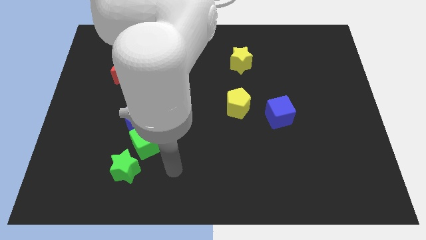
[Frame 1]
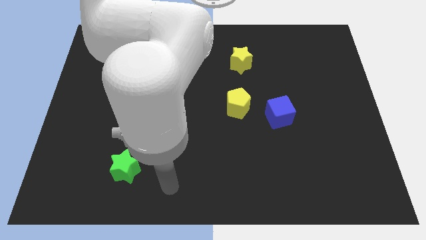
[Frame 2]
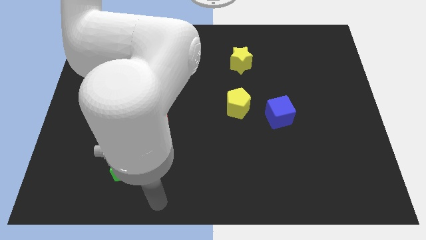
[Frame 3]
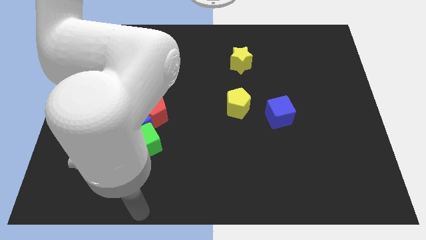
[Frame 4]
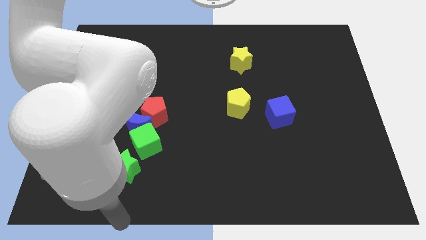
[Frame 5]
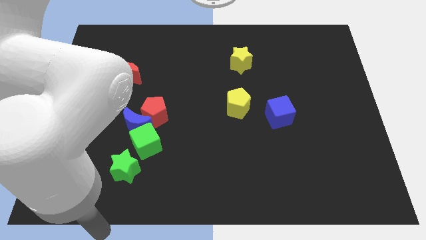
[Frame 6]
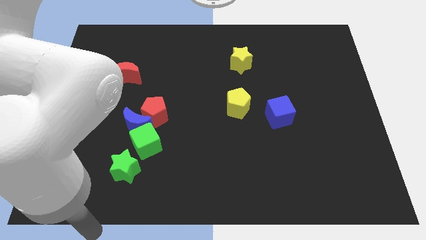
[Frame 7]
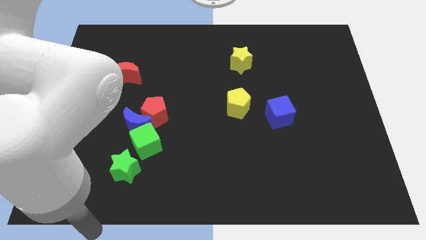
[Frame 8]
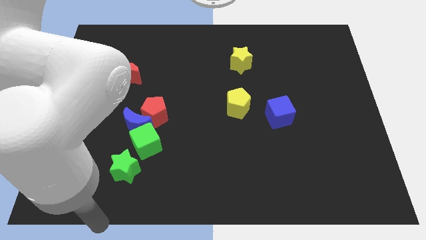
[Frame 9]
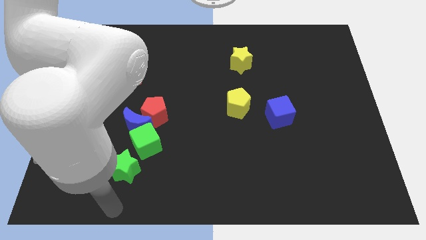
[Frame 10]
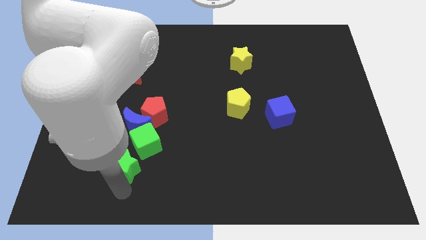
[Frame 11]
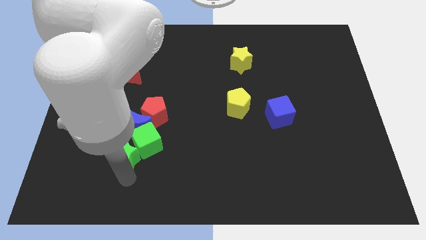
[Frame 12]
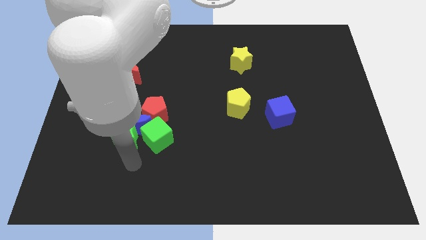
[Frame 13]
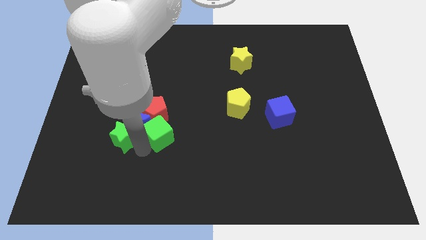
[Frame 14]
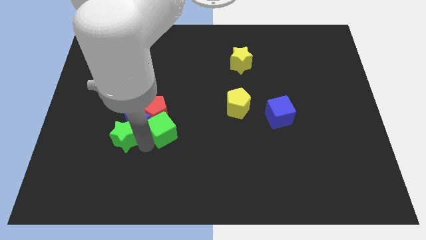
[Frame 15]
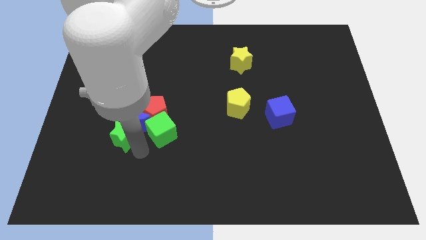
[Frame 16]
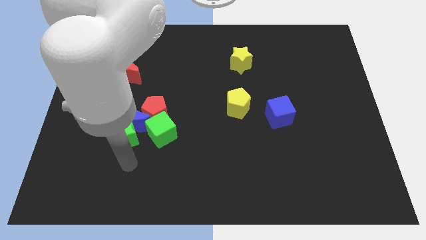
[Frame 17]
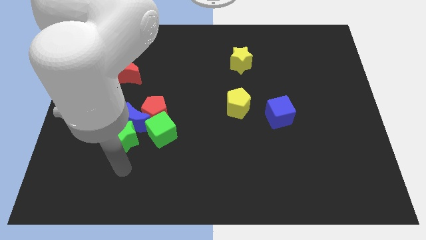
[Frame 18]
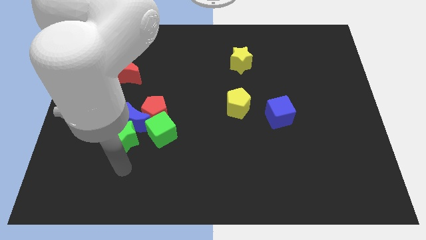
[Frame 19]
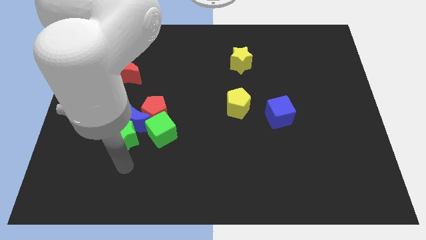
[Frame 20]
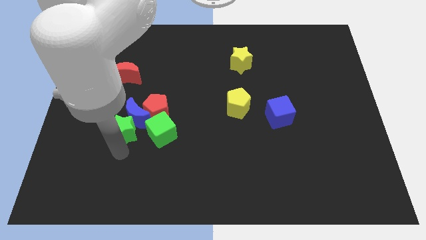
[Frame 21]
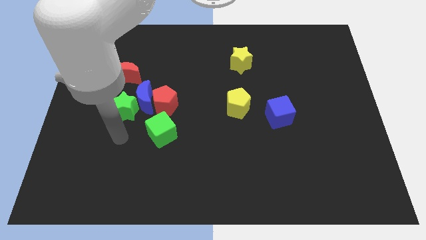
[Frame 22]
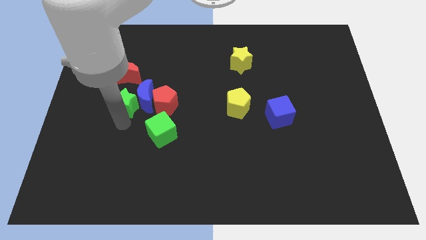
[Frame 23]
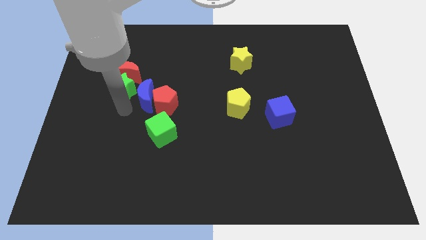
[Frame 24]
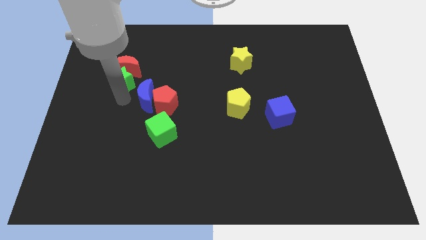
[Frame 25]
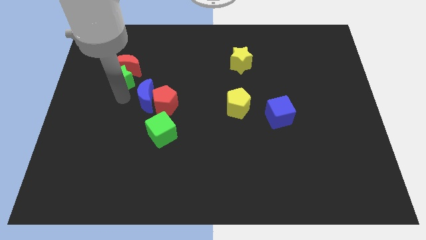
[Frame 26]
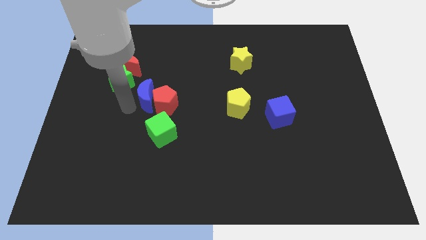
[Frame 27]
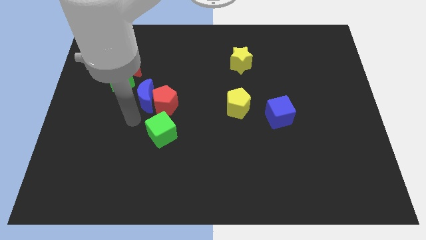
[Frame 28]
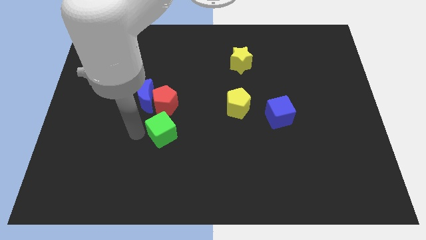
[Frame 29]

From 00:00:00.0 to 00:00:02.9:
place the green star below the red crescent

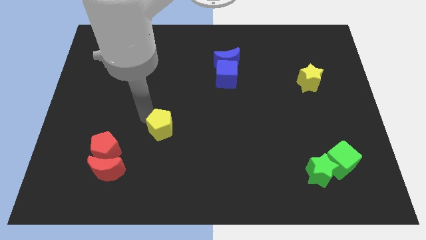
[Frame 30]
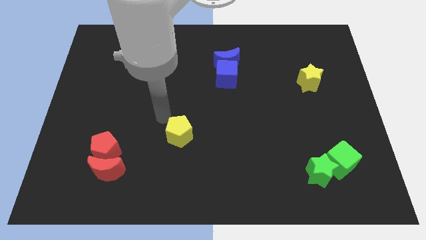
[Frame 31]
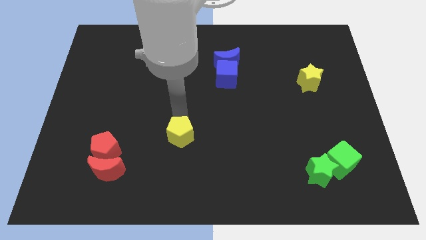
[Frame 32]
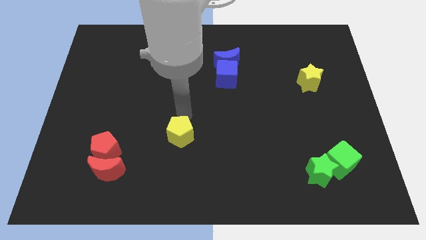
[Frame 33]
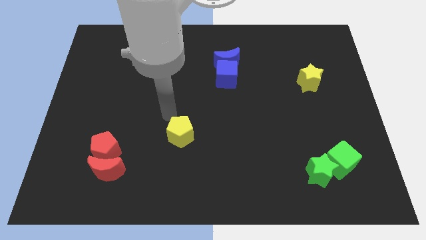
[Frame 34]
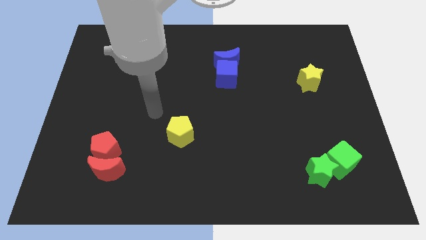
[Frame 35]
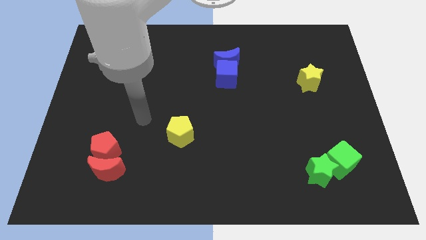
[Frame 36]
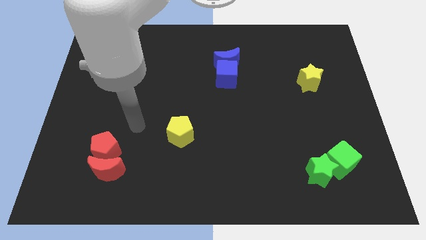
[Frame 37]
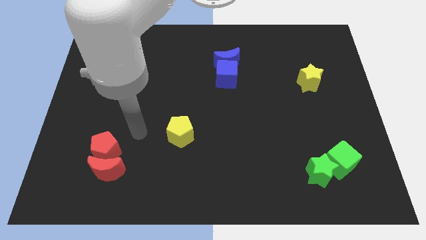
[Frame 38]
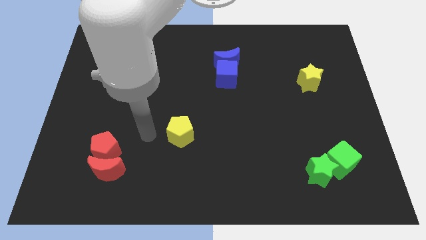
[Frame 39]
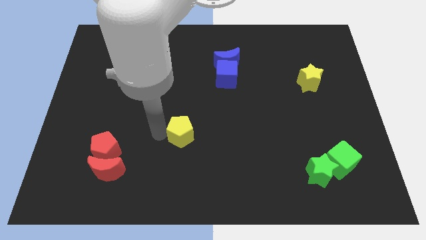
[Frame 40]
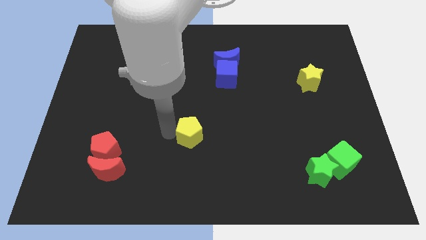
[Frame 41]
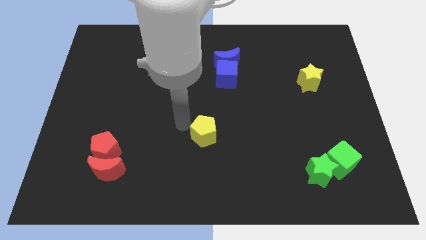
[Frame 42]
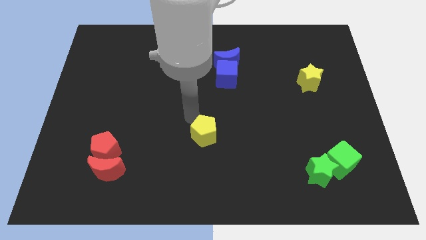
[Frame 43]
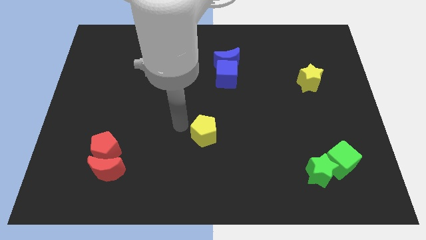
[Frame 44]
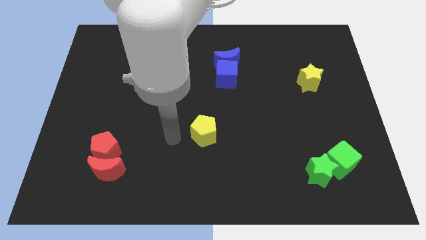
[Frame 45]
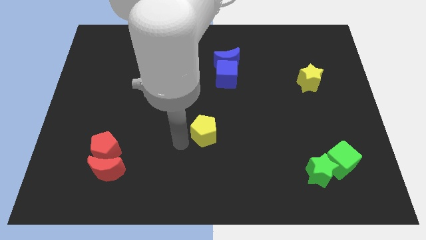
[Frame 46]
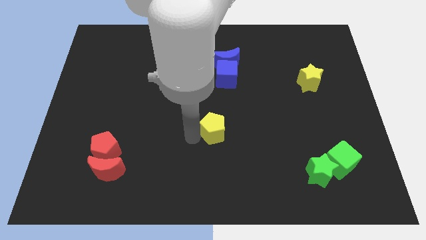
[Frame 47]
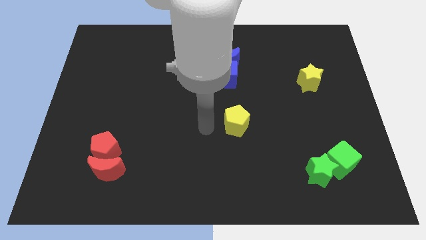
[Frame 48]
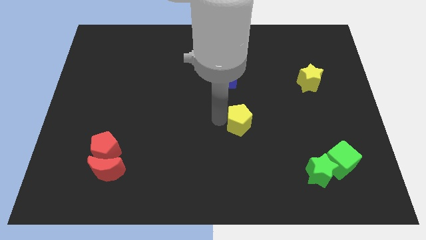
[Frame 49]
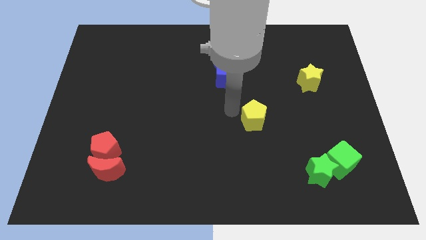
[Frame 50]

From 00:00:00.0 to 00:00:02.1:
place the yellow pentagon diagonally to yellow star

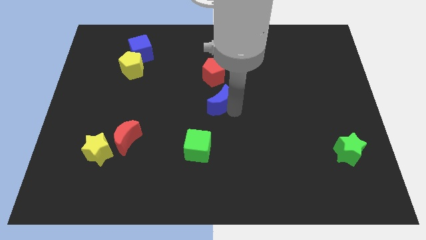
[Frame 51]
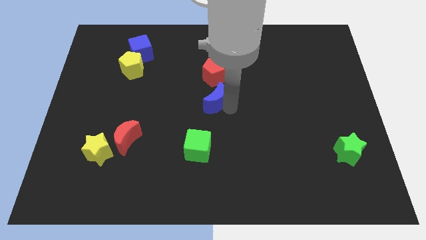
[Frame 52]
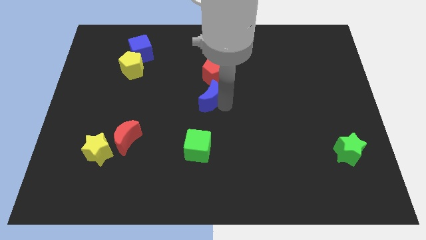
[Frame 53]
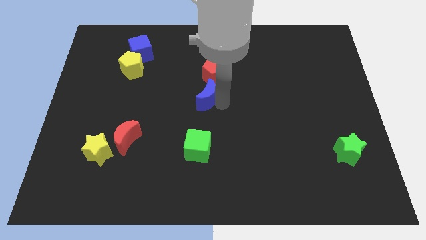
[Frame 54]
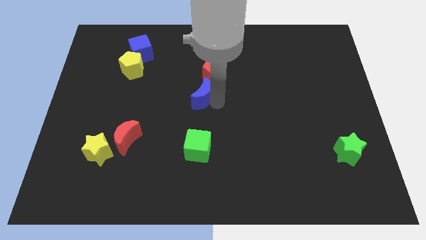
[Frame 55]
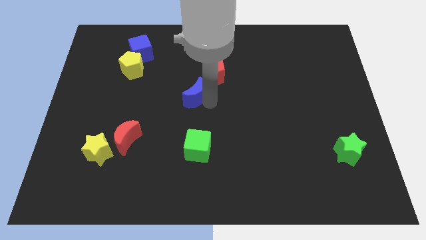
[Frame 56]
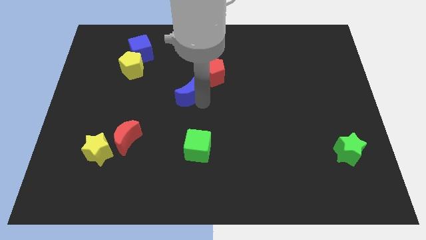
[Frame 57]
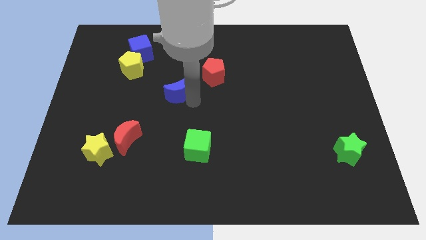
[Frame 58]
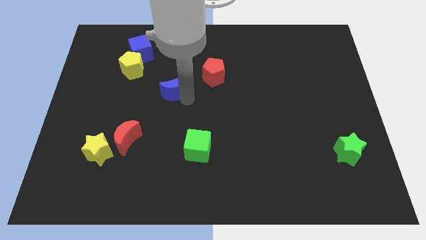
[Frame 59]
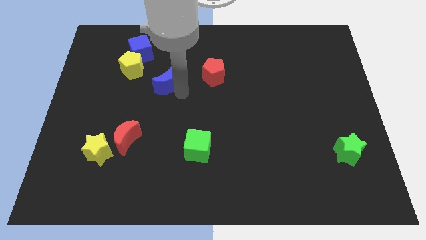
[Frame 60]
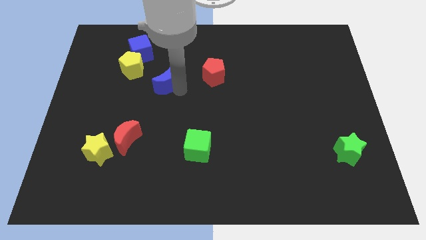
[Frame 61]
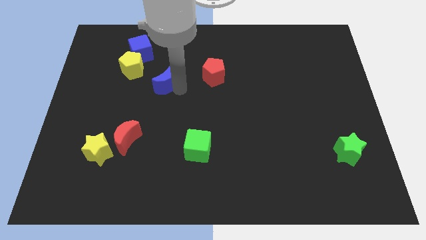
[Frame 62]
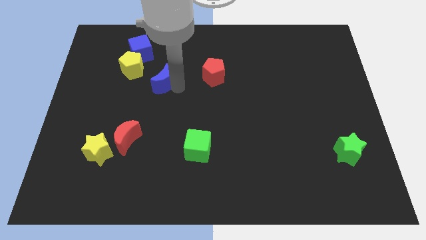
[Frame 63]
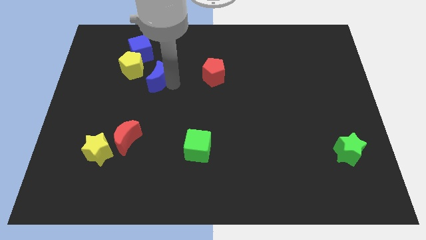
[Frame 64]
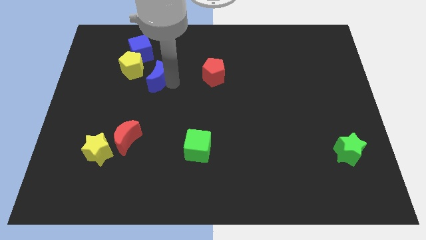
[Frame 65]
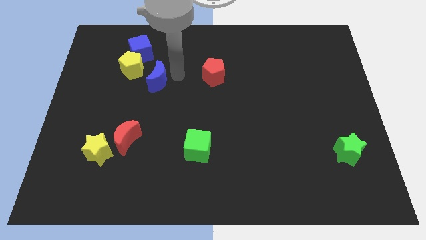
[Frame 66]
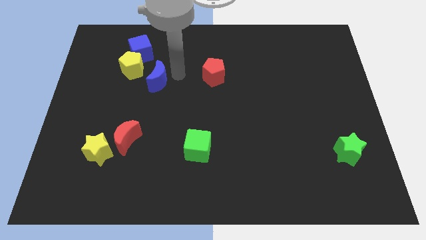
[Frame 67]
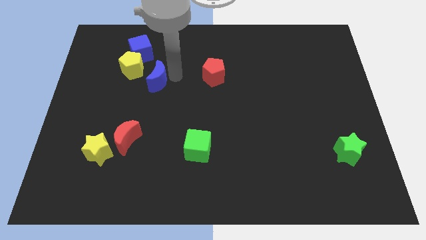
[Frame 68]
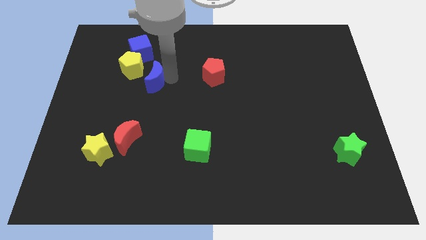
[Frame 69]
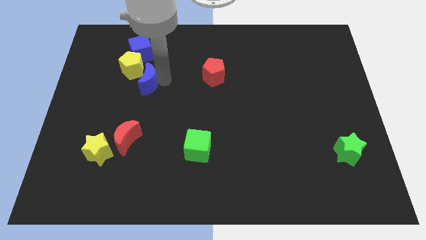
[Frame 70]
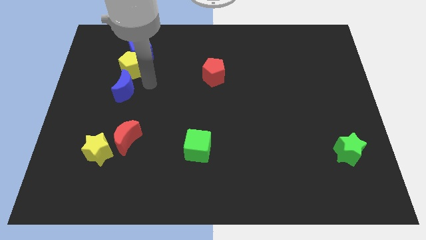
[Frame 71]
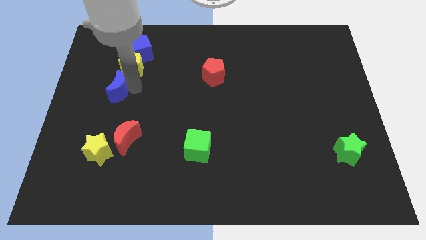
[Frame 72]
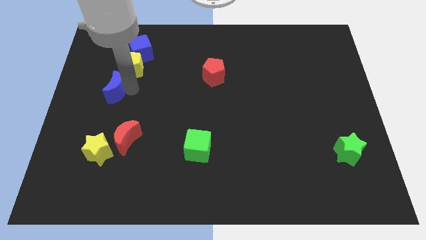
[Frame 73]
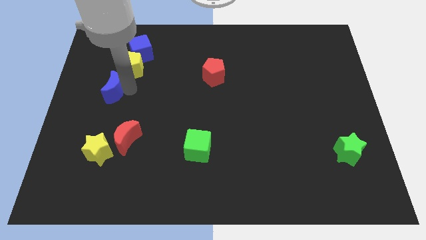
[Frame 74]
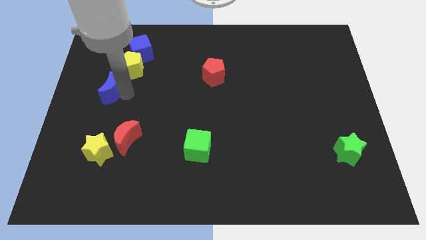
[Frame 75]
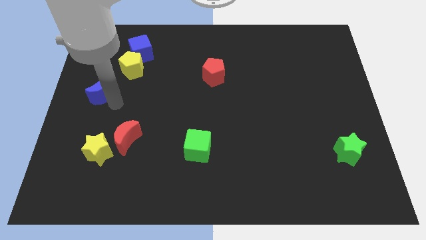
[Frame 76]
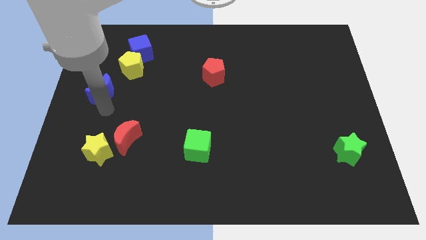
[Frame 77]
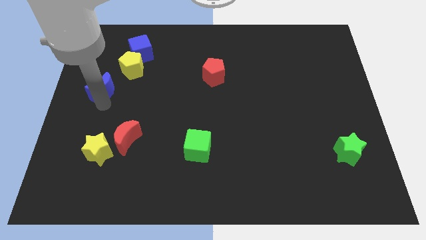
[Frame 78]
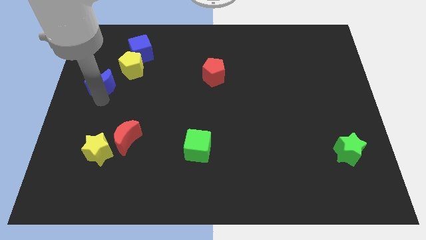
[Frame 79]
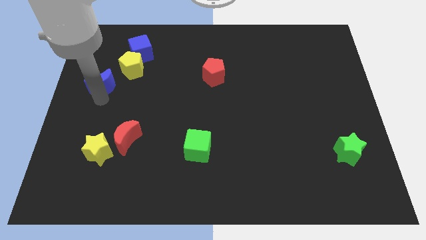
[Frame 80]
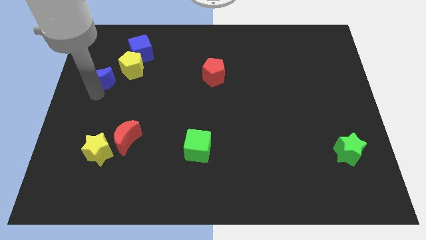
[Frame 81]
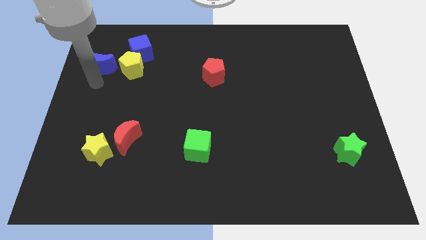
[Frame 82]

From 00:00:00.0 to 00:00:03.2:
push blue crescent beside yellow pentagon

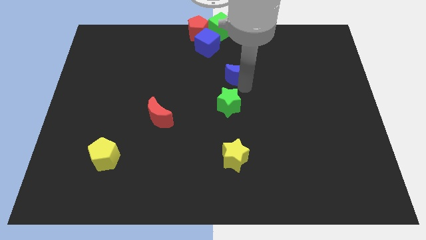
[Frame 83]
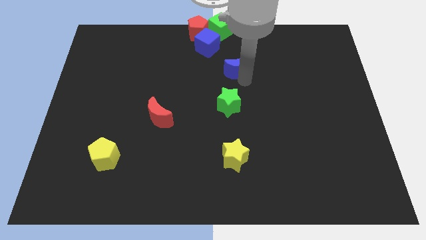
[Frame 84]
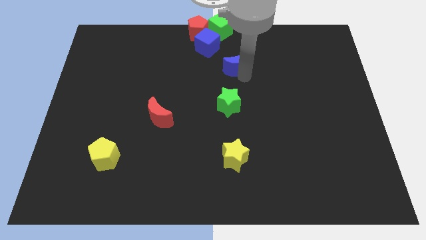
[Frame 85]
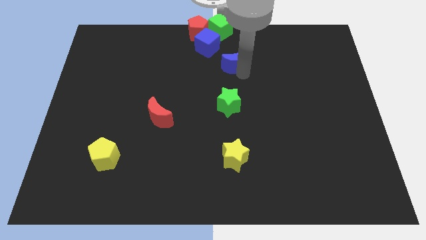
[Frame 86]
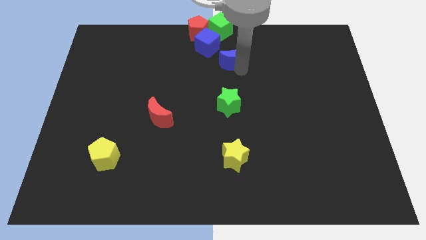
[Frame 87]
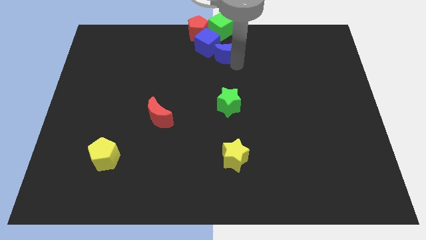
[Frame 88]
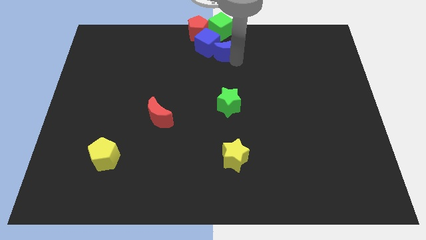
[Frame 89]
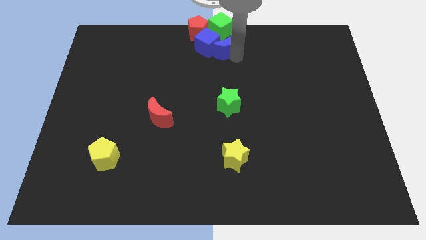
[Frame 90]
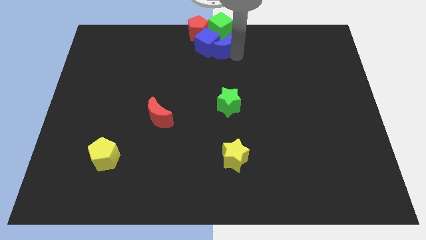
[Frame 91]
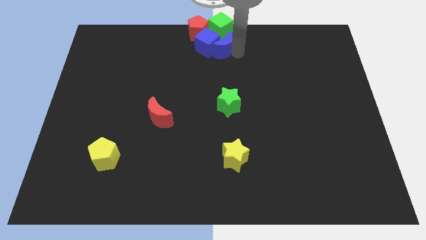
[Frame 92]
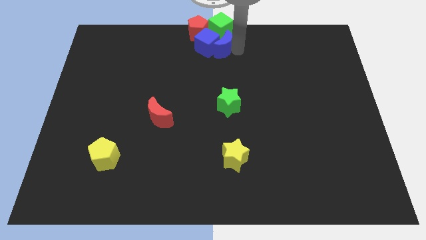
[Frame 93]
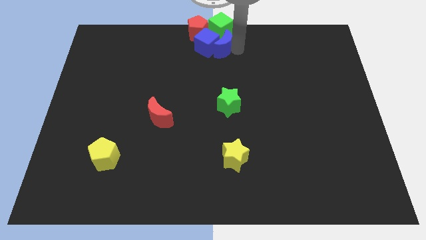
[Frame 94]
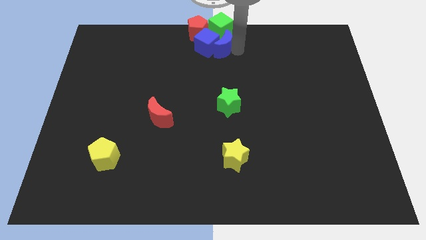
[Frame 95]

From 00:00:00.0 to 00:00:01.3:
push the blue crescent into the blue cube
